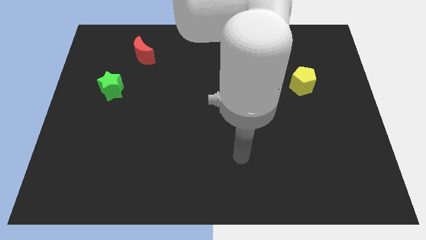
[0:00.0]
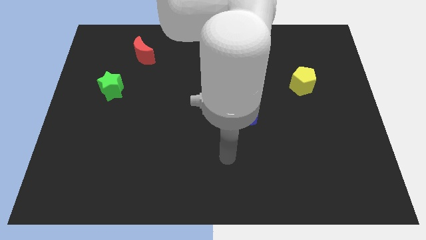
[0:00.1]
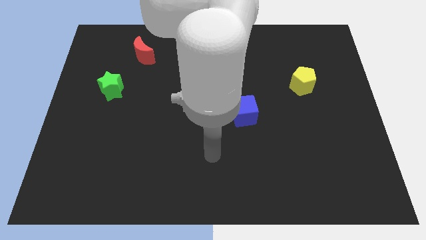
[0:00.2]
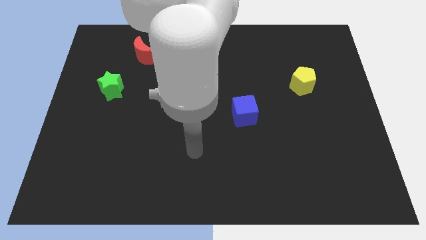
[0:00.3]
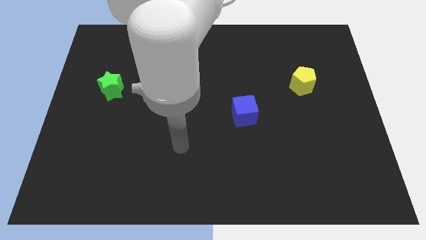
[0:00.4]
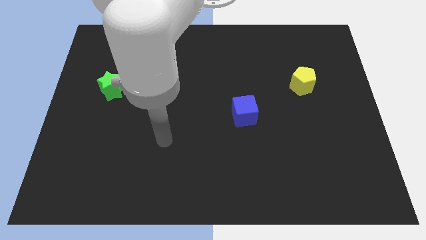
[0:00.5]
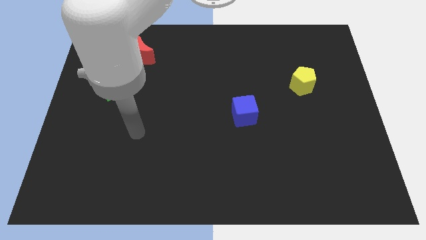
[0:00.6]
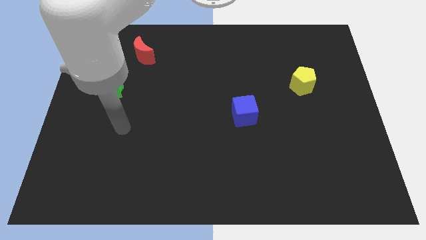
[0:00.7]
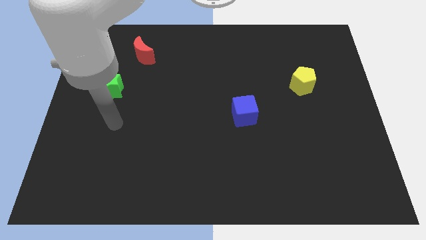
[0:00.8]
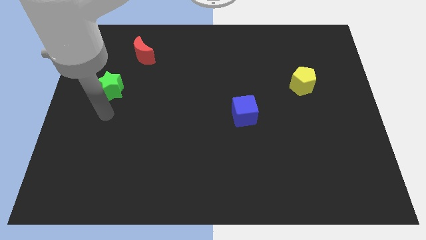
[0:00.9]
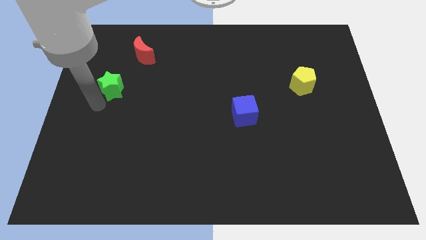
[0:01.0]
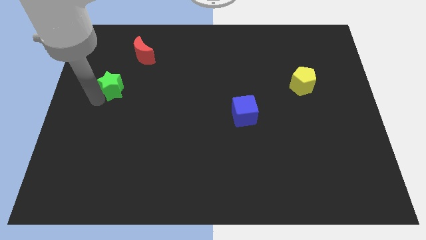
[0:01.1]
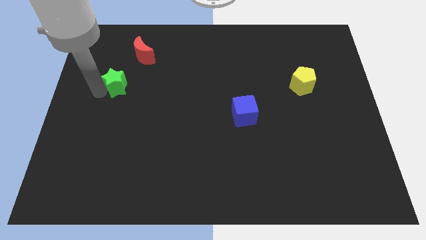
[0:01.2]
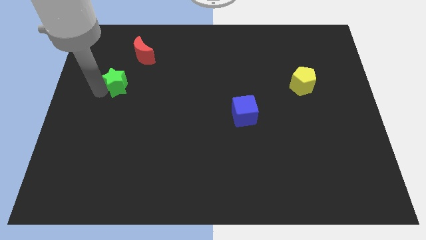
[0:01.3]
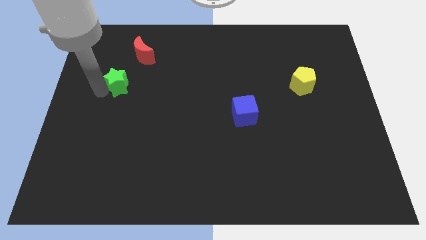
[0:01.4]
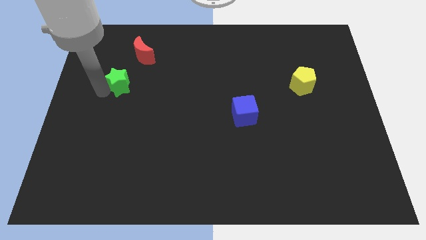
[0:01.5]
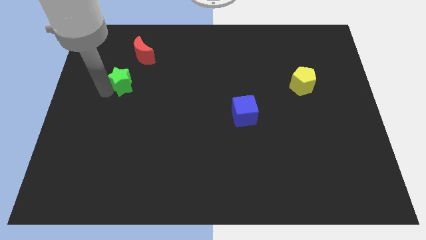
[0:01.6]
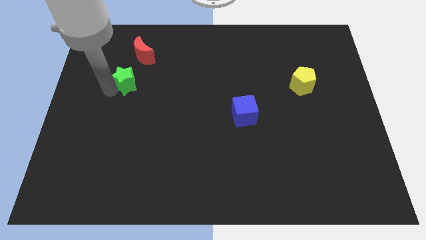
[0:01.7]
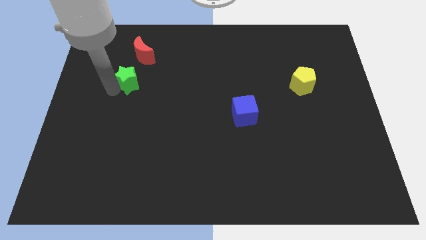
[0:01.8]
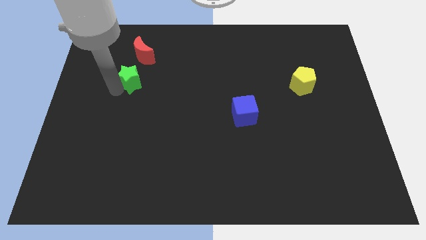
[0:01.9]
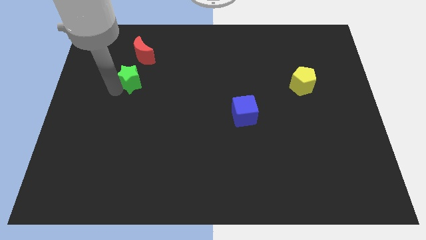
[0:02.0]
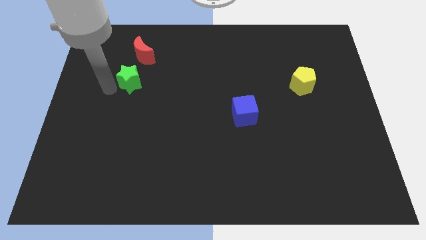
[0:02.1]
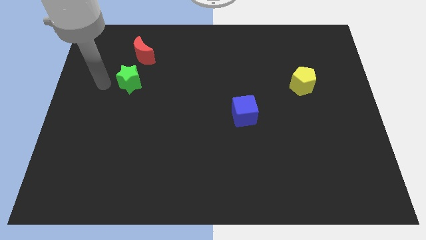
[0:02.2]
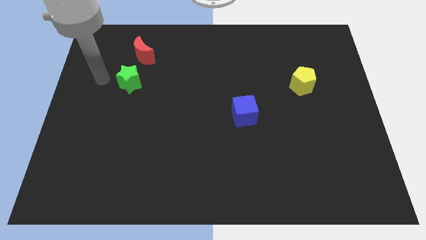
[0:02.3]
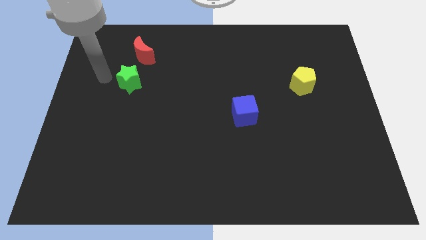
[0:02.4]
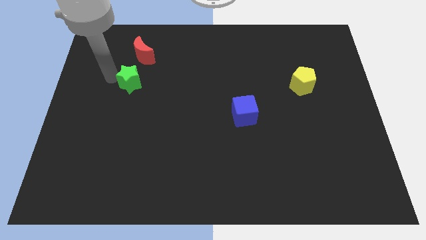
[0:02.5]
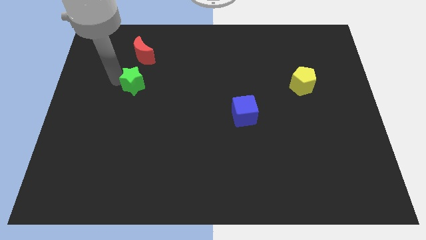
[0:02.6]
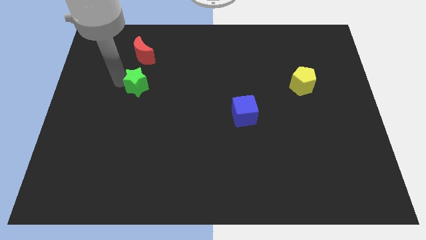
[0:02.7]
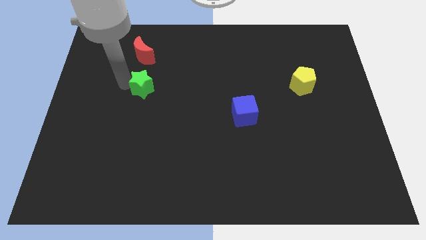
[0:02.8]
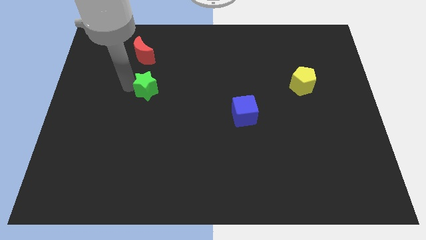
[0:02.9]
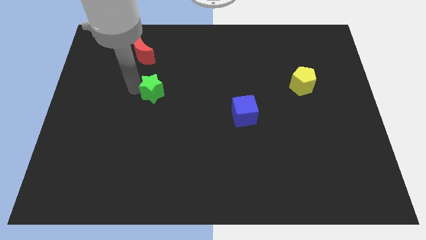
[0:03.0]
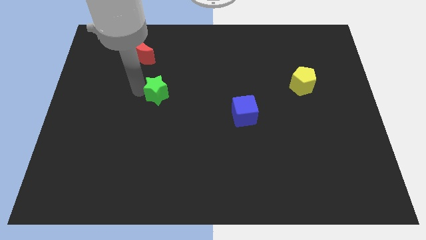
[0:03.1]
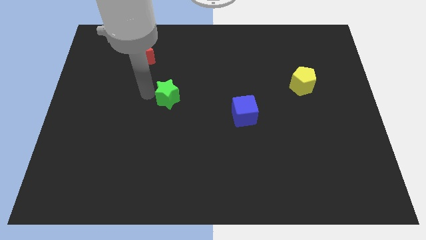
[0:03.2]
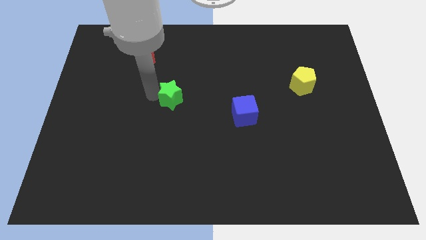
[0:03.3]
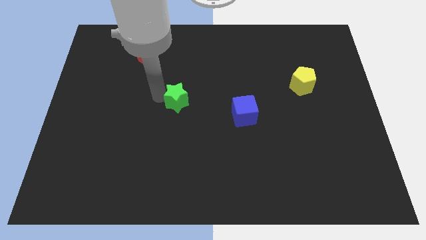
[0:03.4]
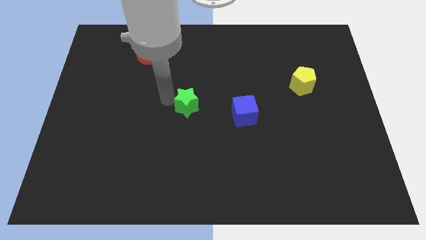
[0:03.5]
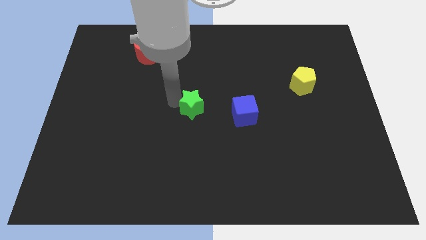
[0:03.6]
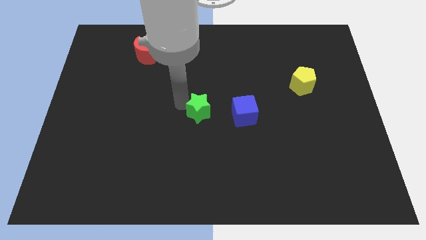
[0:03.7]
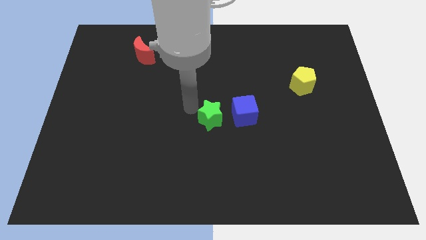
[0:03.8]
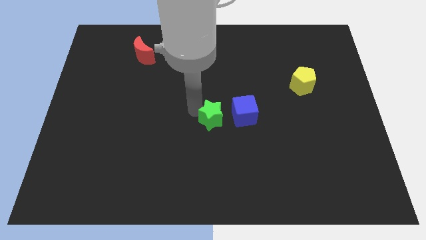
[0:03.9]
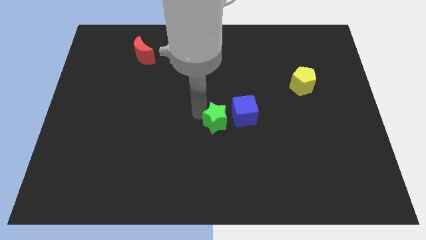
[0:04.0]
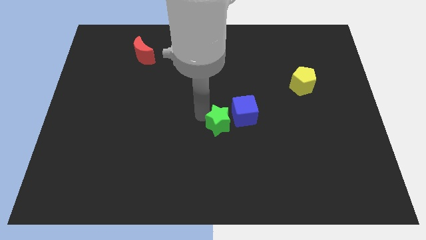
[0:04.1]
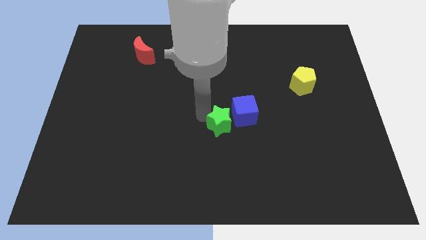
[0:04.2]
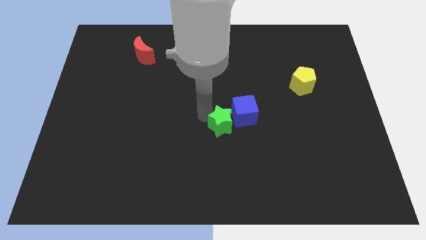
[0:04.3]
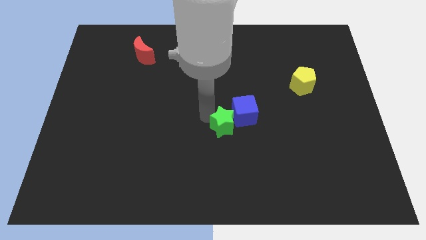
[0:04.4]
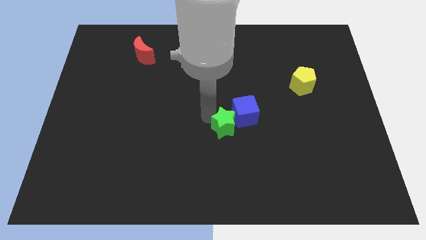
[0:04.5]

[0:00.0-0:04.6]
move the green star close to the cube

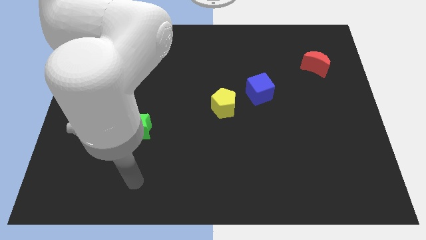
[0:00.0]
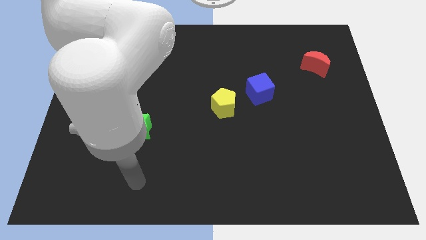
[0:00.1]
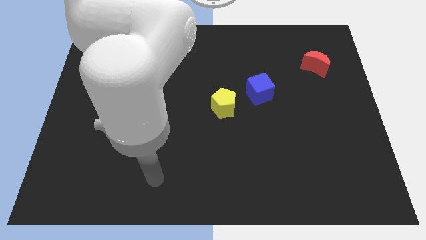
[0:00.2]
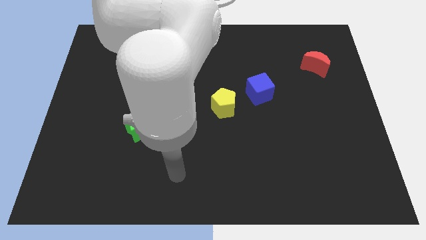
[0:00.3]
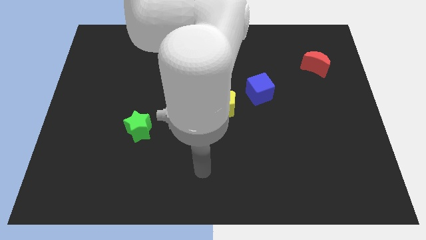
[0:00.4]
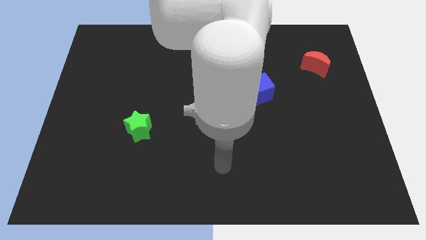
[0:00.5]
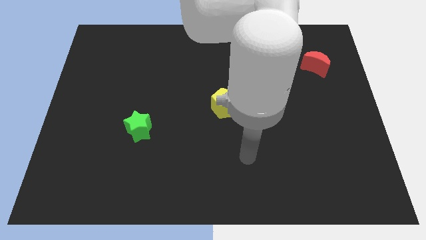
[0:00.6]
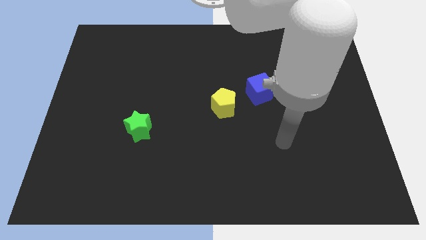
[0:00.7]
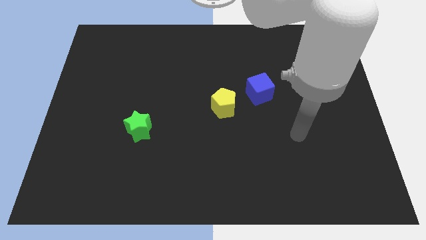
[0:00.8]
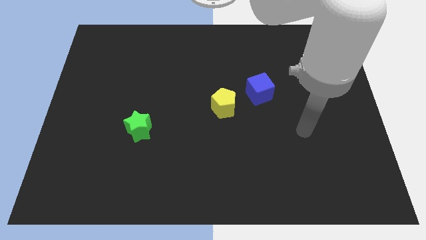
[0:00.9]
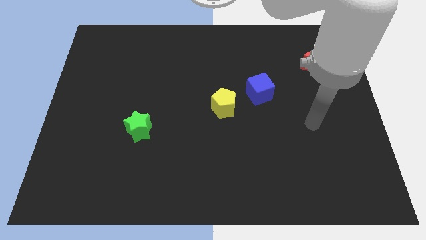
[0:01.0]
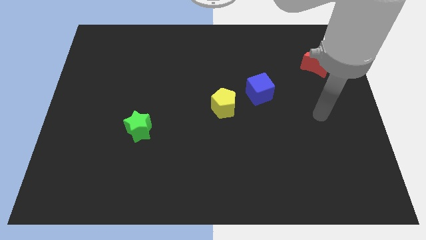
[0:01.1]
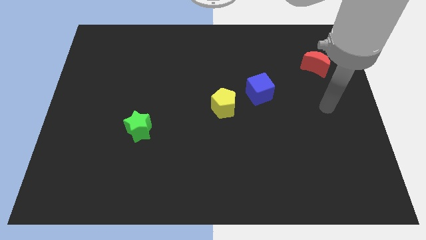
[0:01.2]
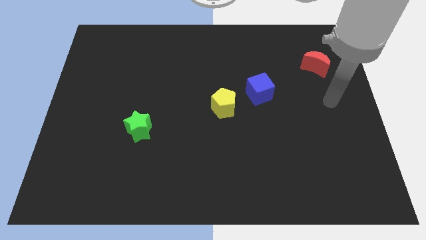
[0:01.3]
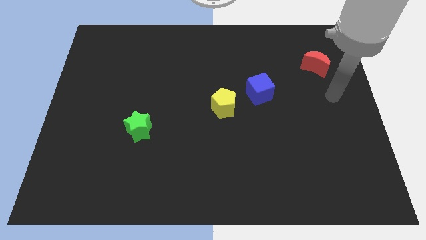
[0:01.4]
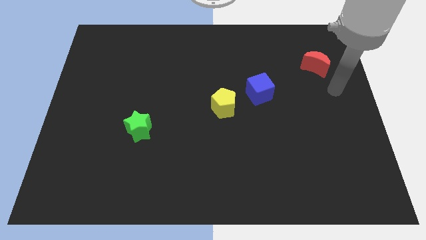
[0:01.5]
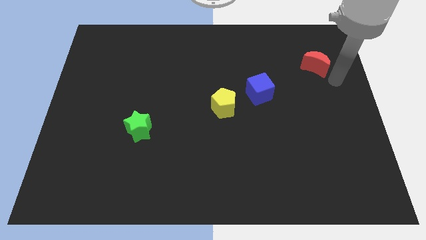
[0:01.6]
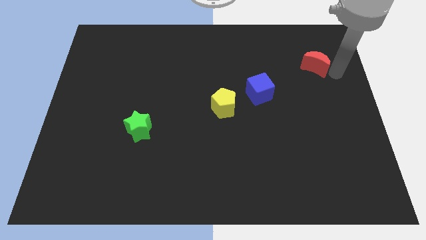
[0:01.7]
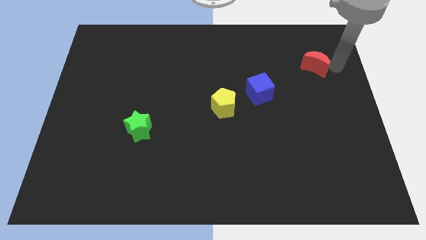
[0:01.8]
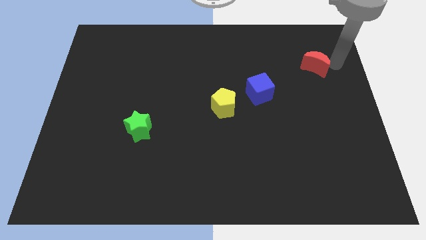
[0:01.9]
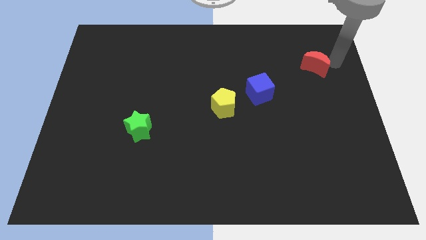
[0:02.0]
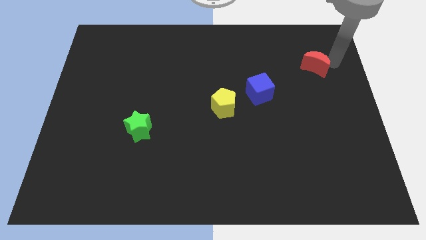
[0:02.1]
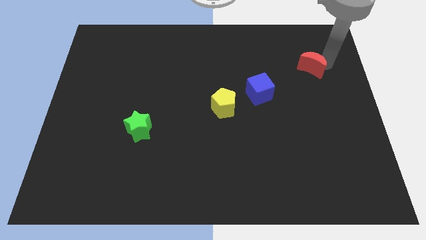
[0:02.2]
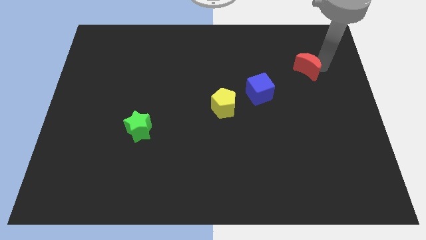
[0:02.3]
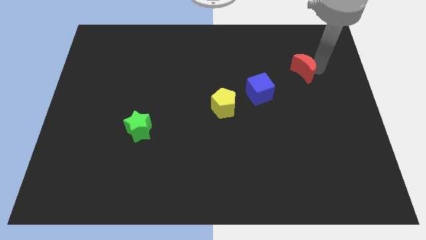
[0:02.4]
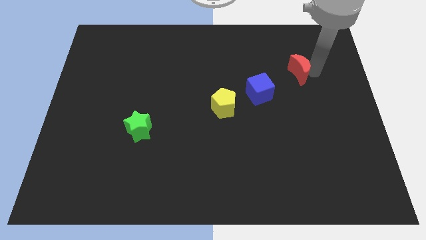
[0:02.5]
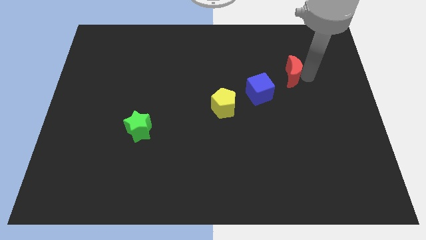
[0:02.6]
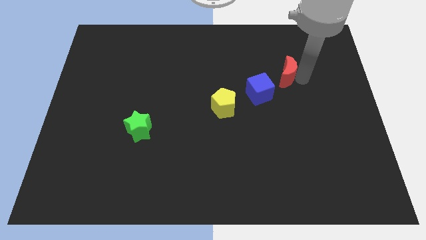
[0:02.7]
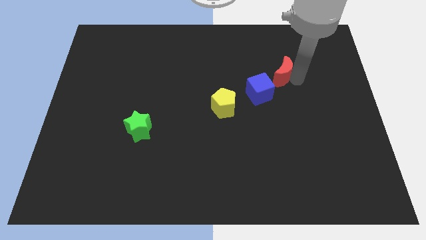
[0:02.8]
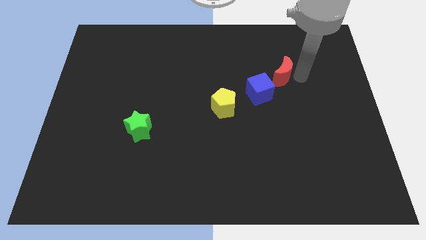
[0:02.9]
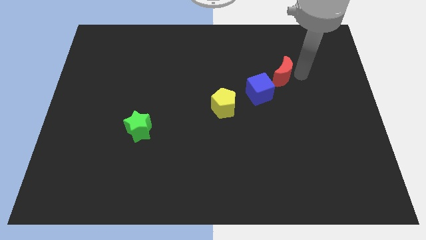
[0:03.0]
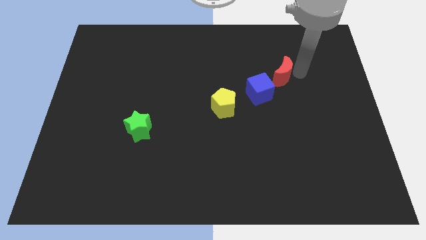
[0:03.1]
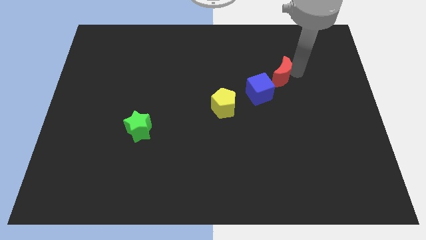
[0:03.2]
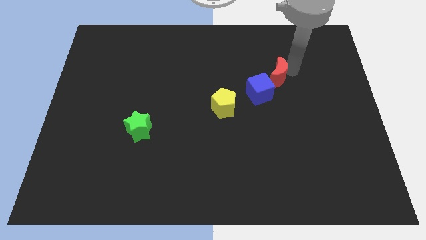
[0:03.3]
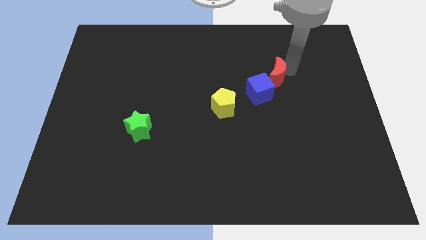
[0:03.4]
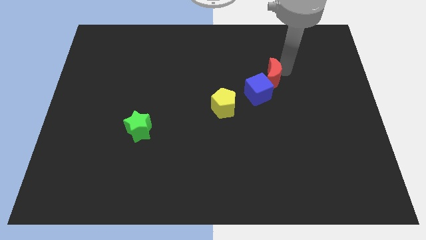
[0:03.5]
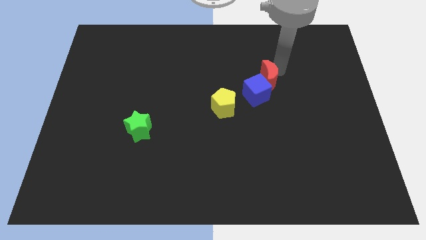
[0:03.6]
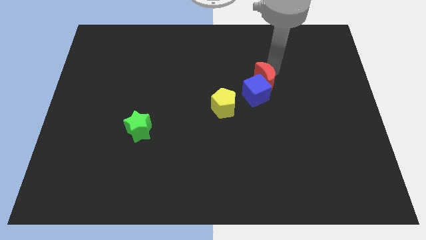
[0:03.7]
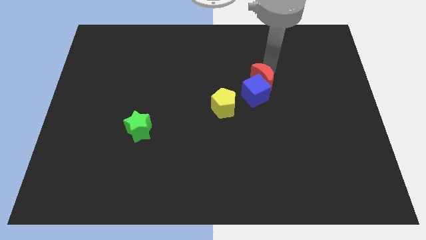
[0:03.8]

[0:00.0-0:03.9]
move the moon towards the blue block
